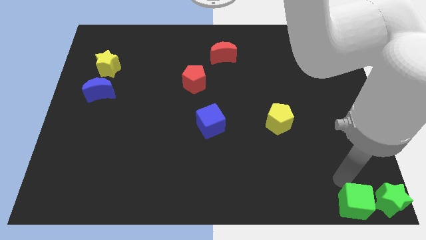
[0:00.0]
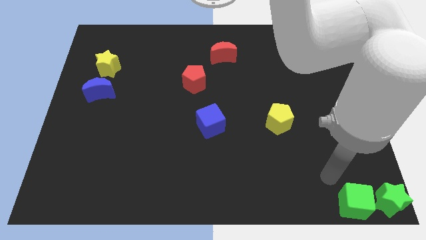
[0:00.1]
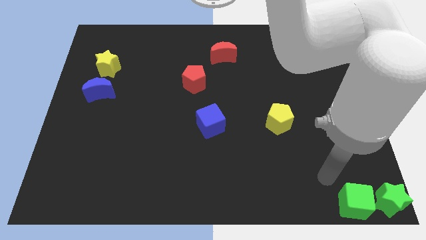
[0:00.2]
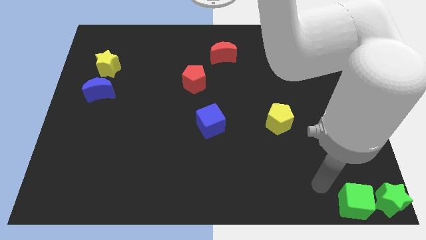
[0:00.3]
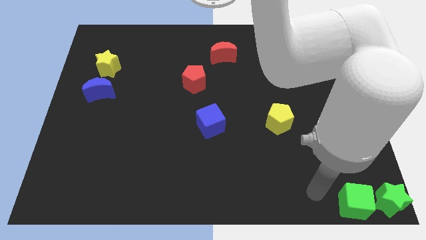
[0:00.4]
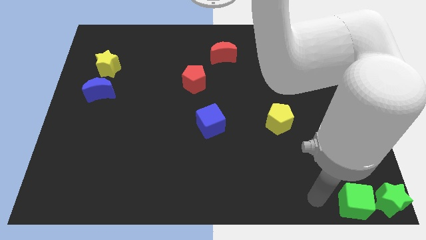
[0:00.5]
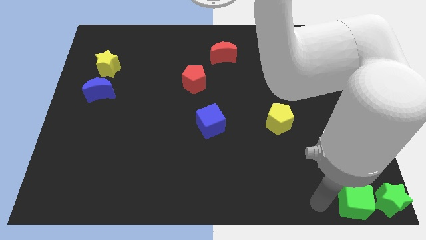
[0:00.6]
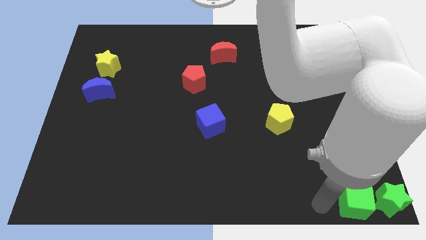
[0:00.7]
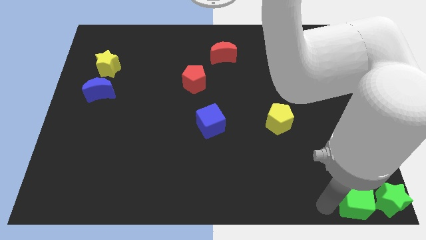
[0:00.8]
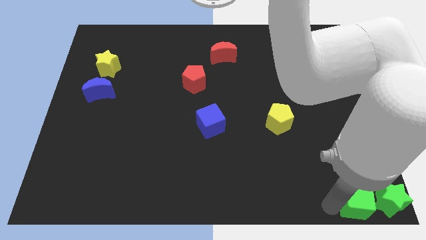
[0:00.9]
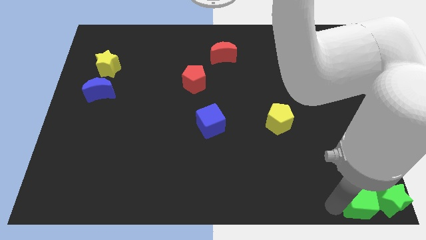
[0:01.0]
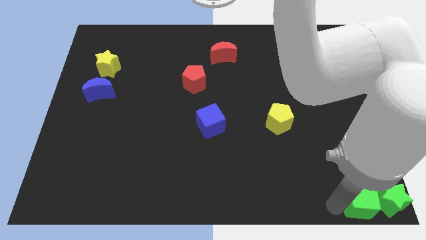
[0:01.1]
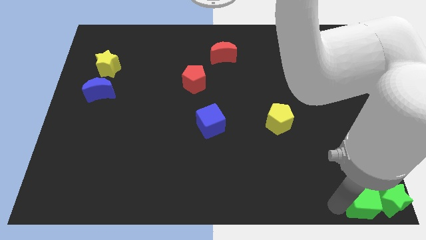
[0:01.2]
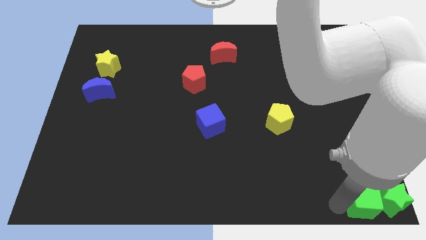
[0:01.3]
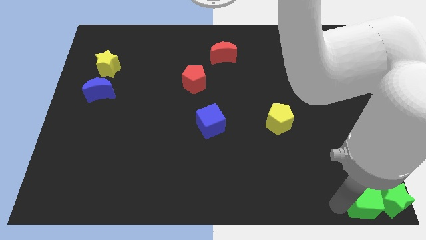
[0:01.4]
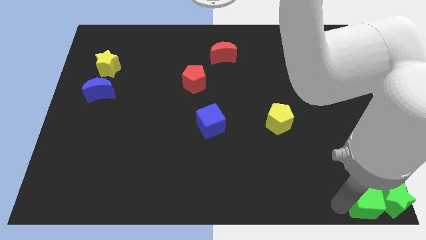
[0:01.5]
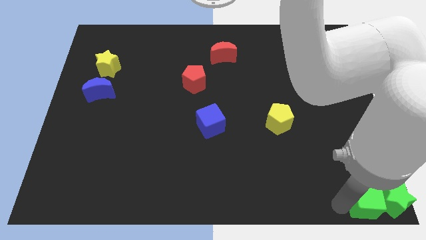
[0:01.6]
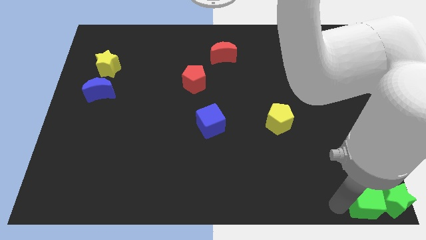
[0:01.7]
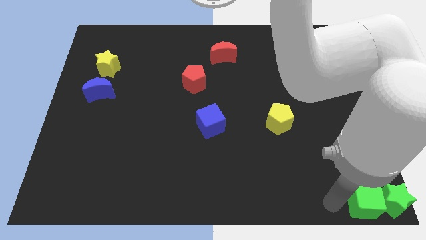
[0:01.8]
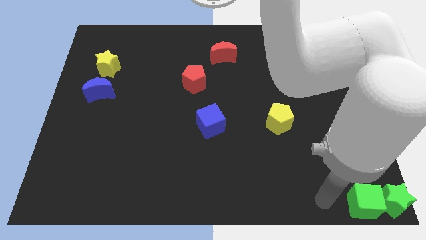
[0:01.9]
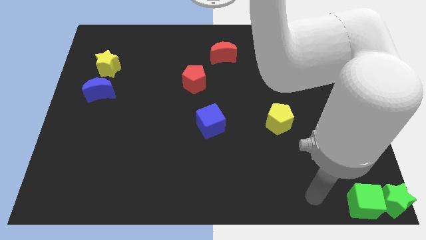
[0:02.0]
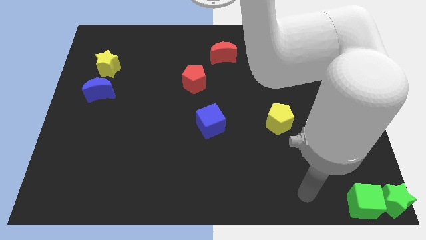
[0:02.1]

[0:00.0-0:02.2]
push the green cube into the green star

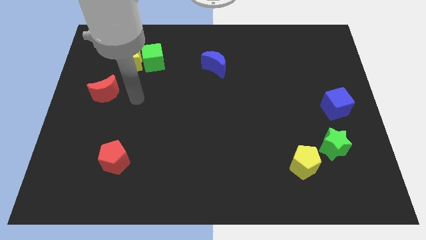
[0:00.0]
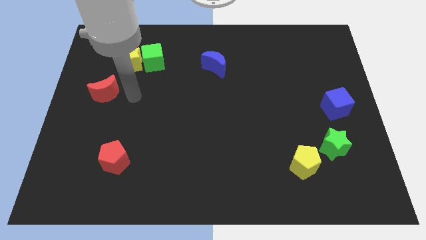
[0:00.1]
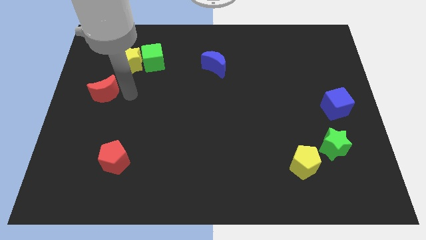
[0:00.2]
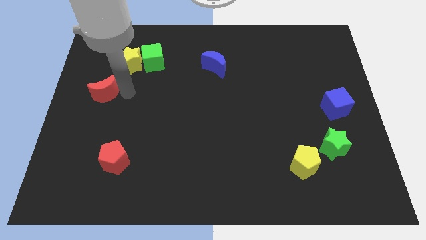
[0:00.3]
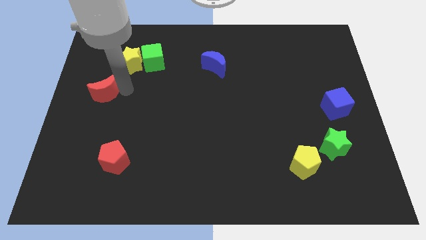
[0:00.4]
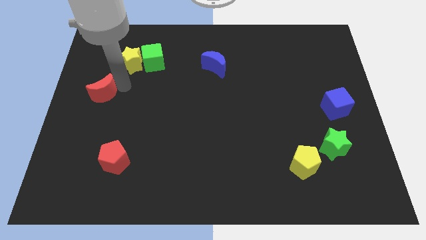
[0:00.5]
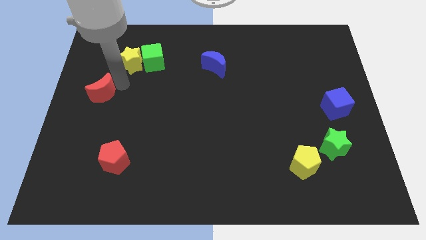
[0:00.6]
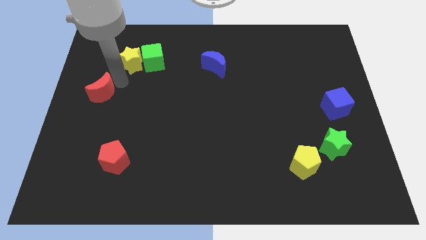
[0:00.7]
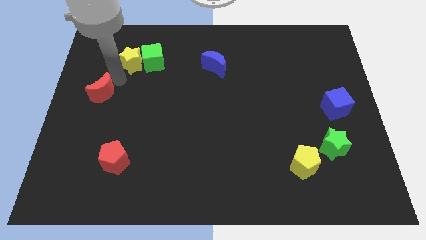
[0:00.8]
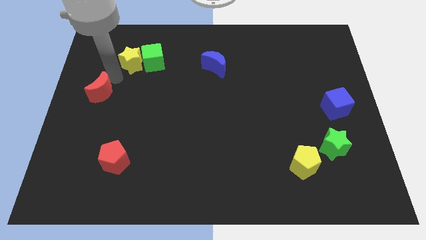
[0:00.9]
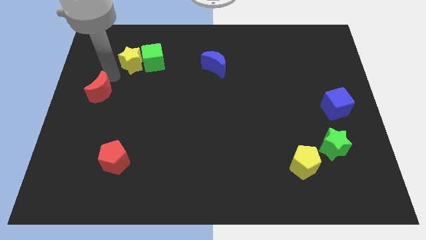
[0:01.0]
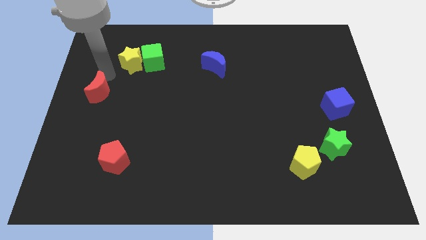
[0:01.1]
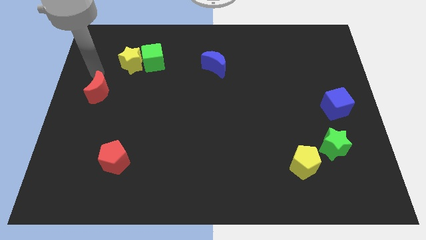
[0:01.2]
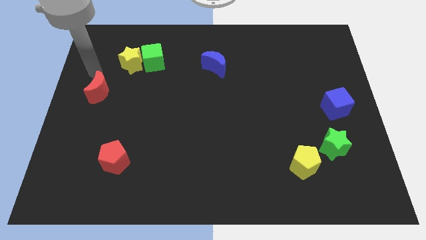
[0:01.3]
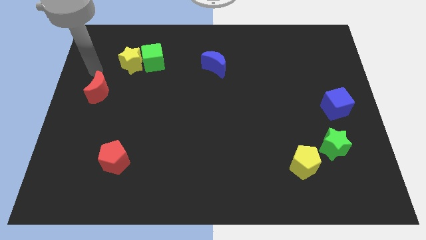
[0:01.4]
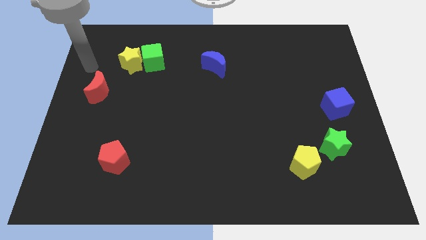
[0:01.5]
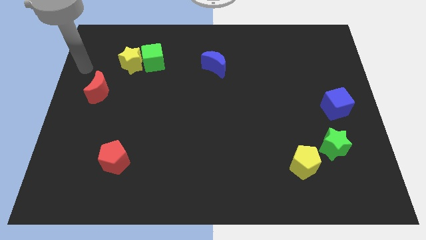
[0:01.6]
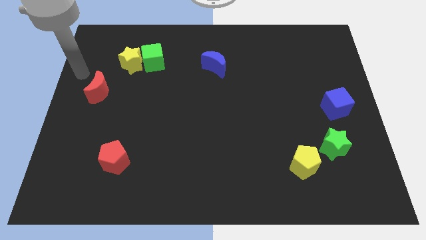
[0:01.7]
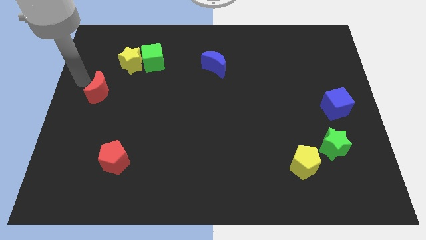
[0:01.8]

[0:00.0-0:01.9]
push the red moon towards the left slightly

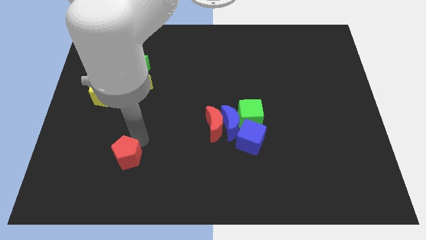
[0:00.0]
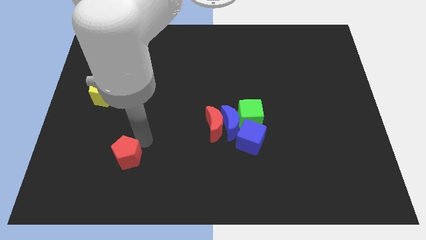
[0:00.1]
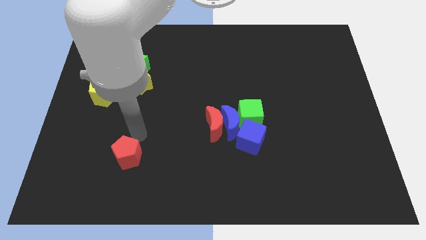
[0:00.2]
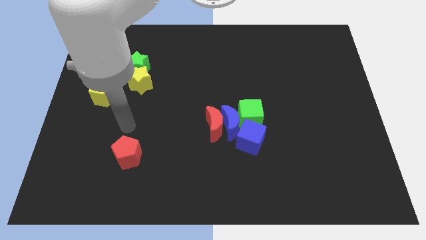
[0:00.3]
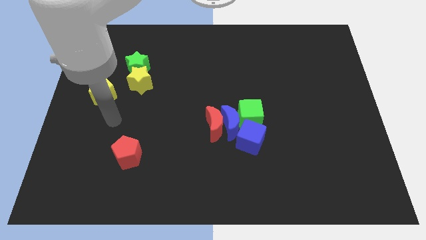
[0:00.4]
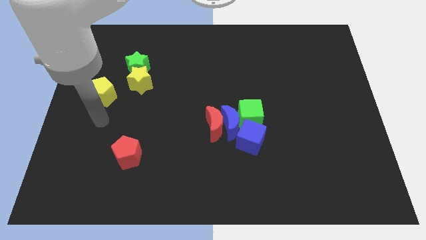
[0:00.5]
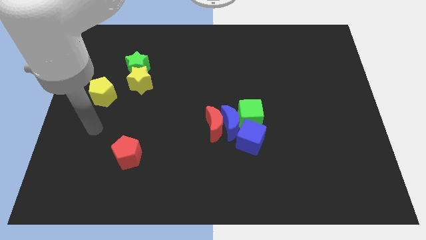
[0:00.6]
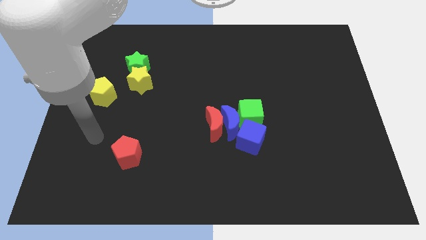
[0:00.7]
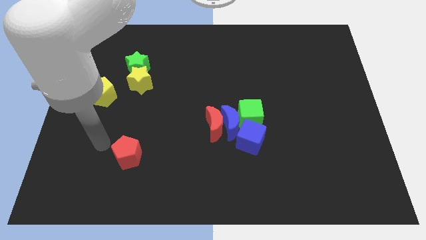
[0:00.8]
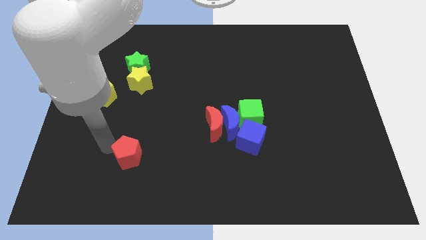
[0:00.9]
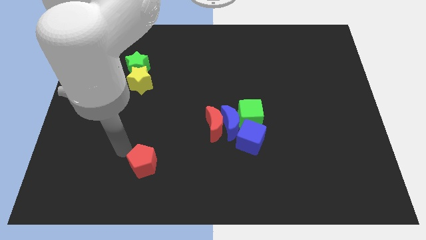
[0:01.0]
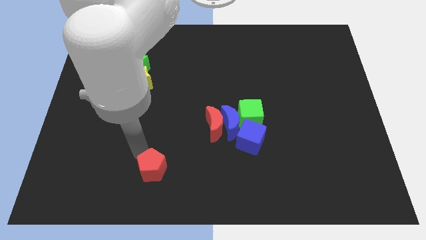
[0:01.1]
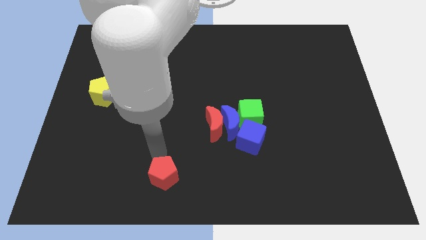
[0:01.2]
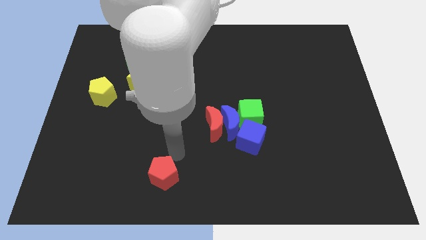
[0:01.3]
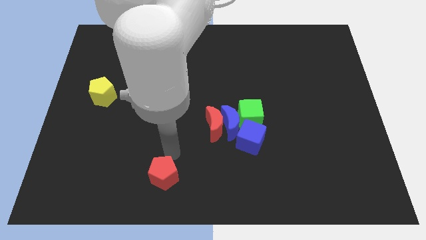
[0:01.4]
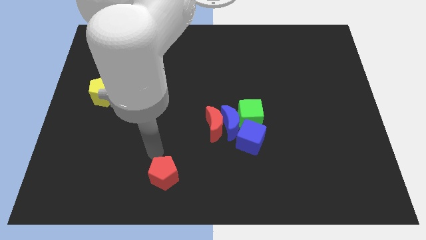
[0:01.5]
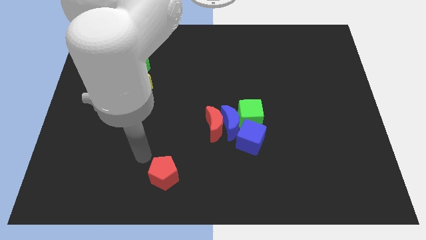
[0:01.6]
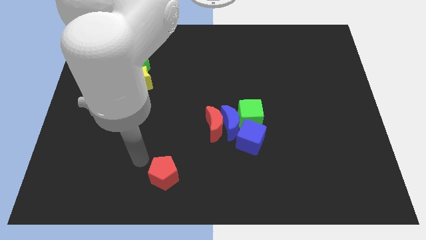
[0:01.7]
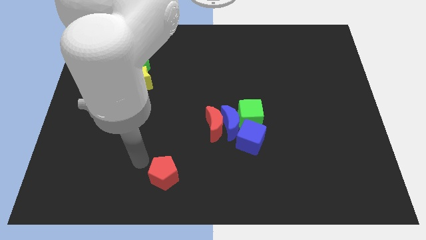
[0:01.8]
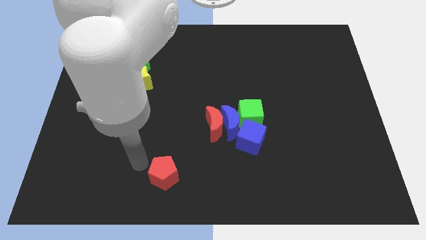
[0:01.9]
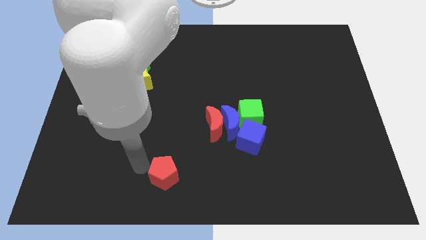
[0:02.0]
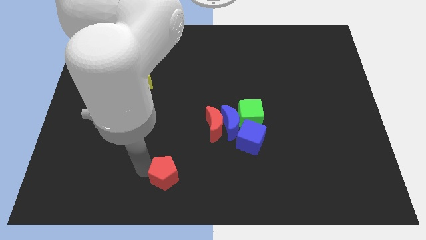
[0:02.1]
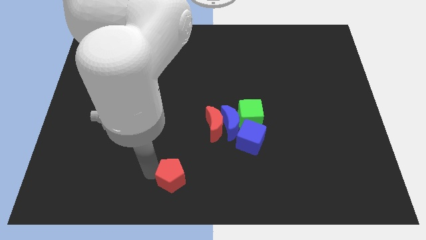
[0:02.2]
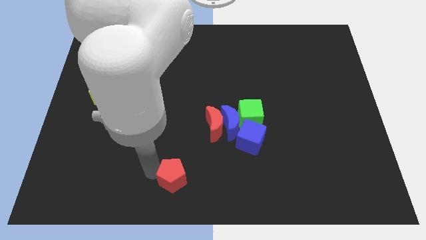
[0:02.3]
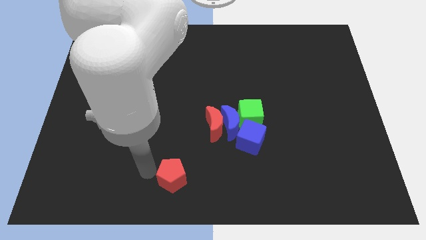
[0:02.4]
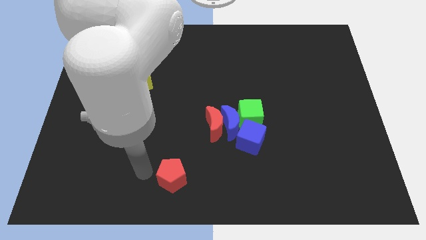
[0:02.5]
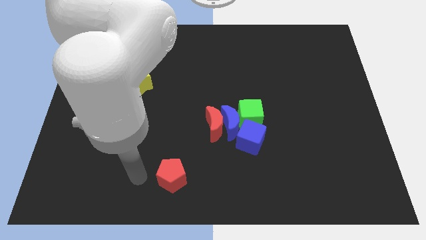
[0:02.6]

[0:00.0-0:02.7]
push the red pentagon to the bottom center of the board

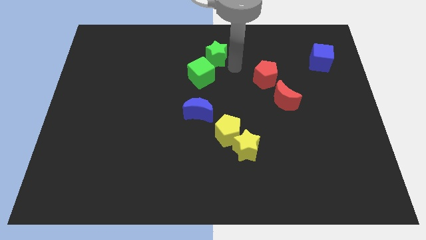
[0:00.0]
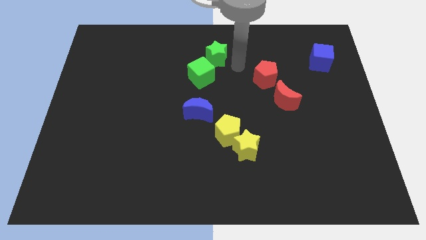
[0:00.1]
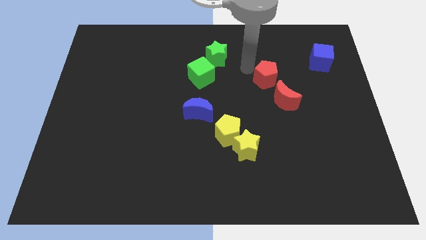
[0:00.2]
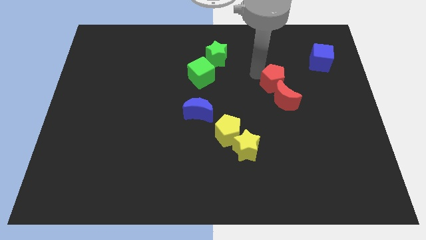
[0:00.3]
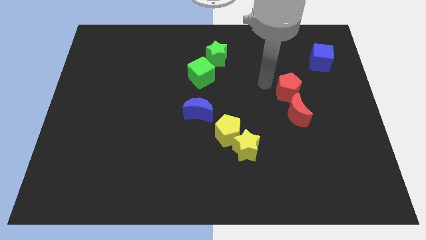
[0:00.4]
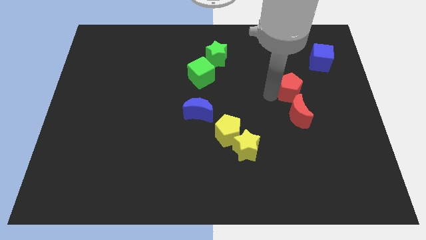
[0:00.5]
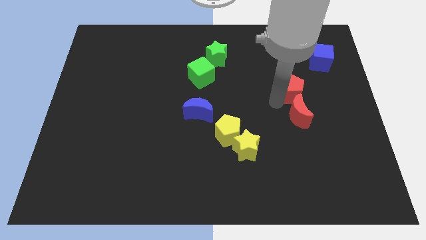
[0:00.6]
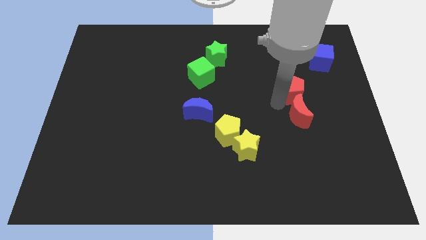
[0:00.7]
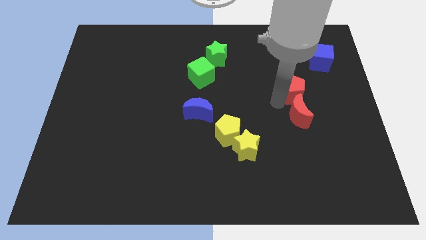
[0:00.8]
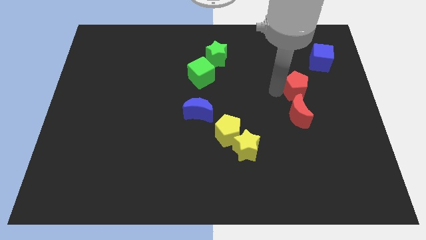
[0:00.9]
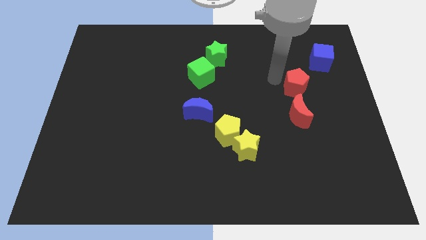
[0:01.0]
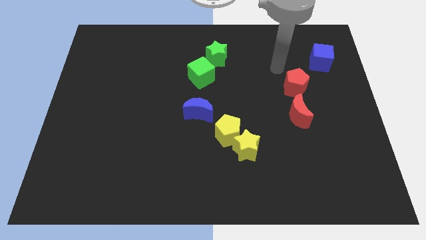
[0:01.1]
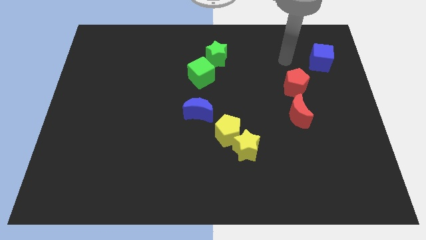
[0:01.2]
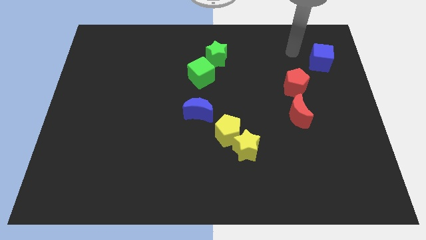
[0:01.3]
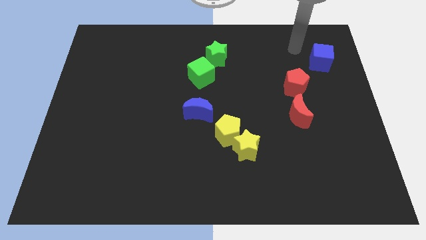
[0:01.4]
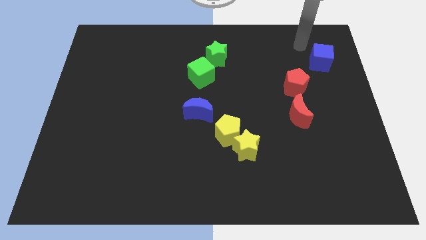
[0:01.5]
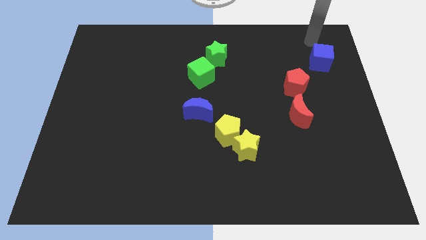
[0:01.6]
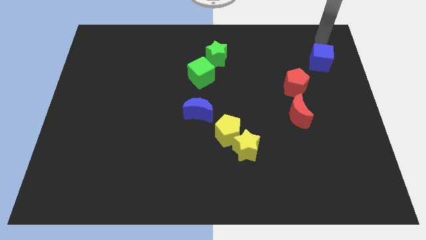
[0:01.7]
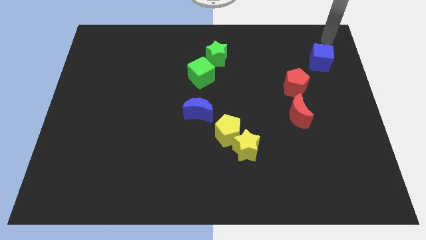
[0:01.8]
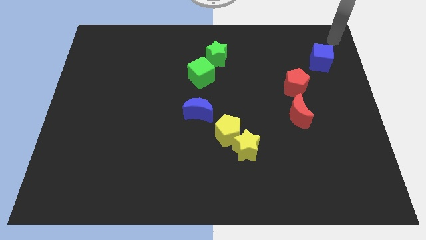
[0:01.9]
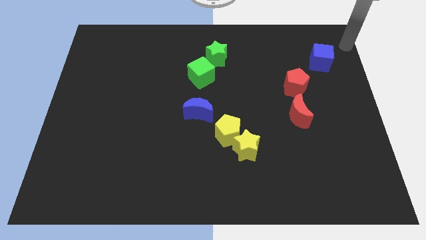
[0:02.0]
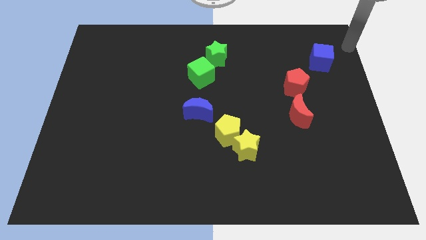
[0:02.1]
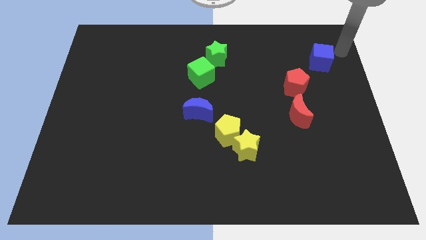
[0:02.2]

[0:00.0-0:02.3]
move the red pentagon above the red crescent
